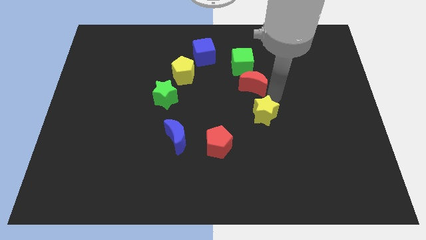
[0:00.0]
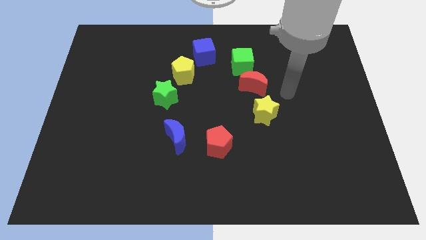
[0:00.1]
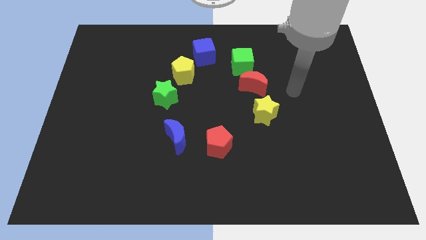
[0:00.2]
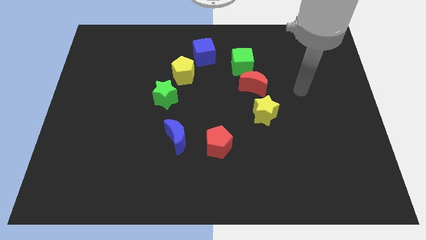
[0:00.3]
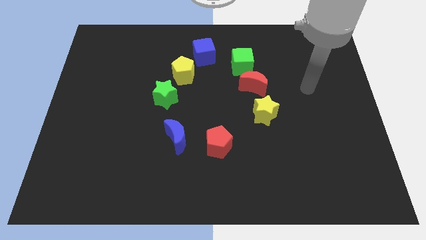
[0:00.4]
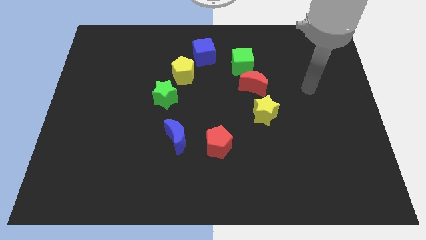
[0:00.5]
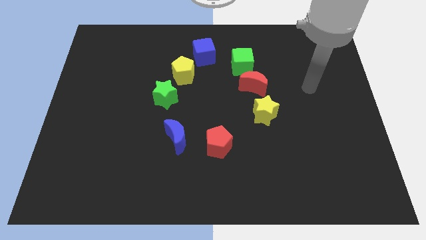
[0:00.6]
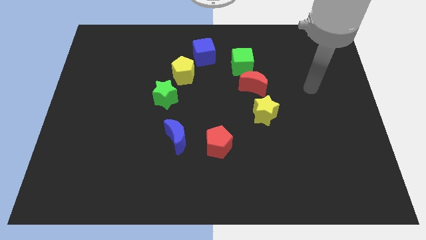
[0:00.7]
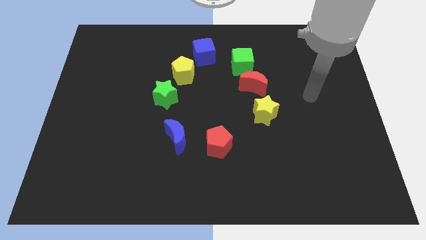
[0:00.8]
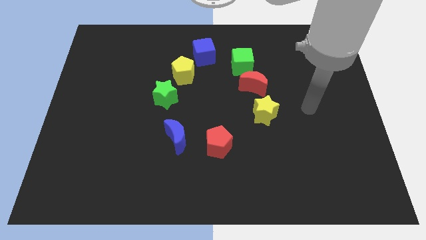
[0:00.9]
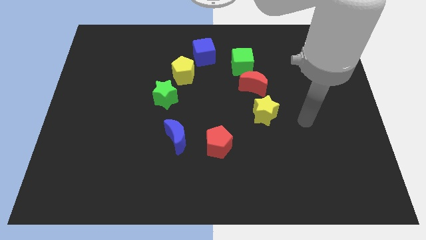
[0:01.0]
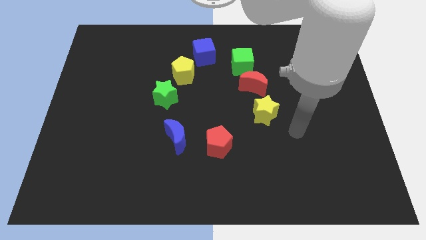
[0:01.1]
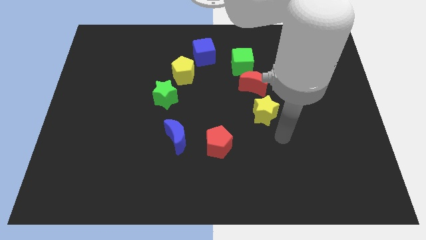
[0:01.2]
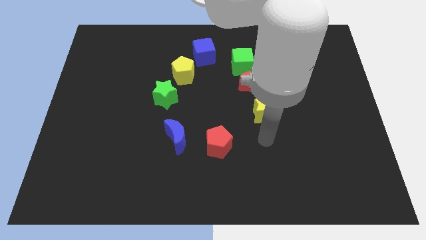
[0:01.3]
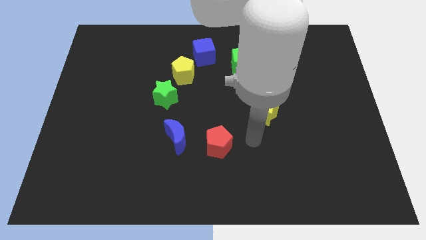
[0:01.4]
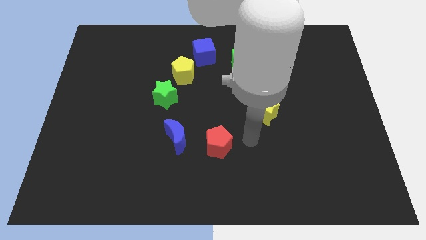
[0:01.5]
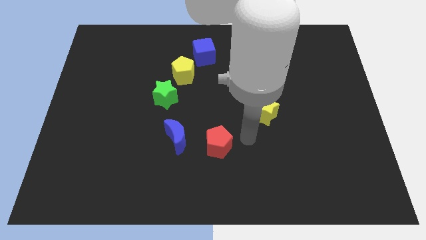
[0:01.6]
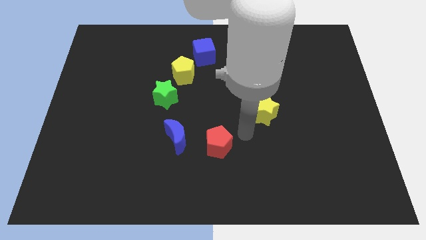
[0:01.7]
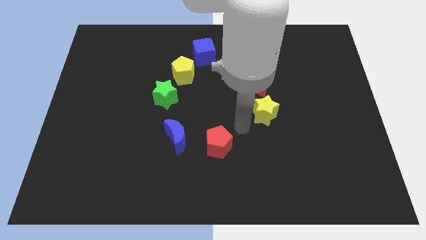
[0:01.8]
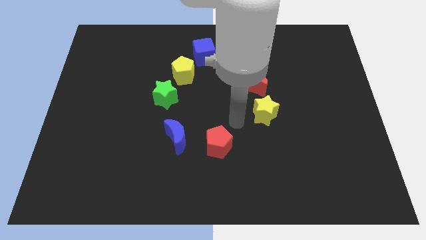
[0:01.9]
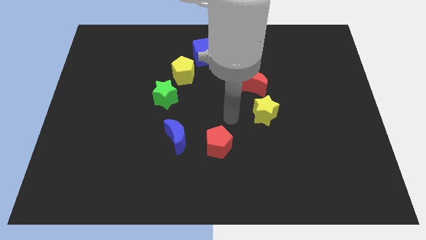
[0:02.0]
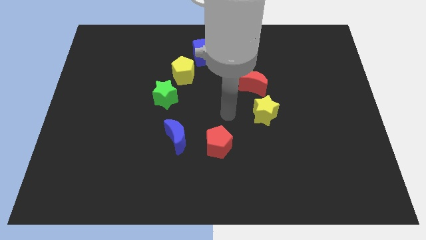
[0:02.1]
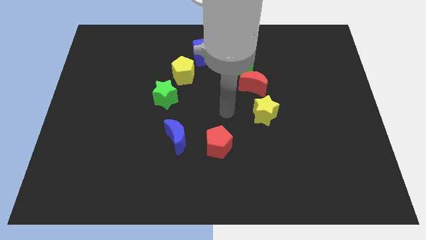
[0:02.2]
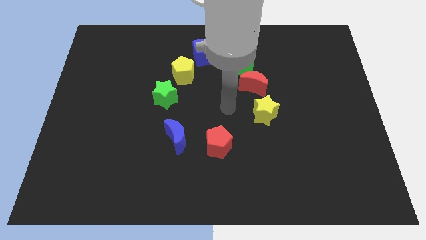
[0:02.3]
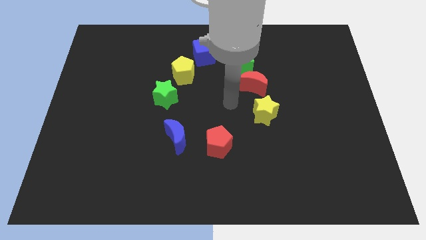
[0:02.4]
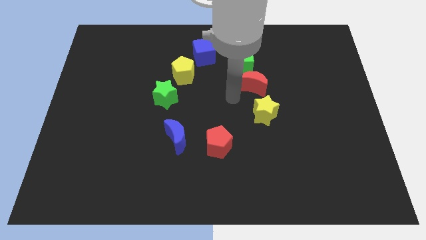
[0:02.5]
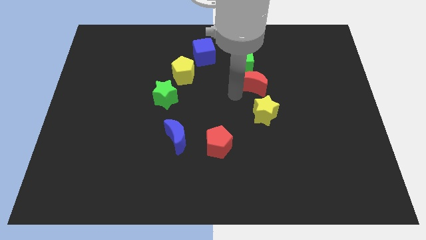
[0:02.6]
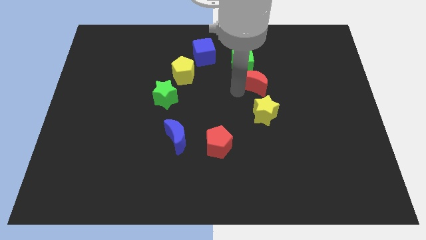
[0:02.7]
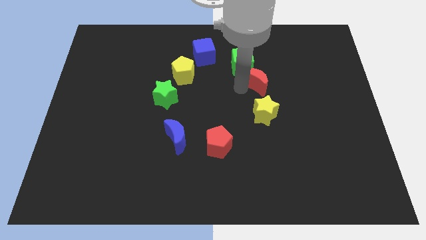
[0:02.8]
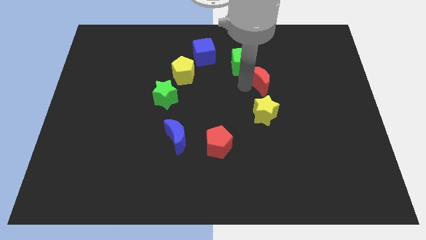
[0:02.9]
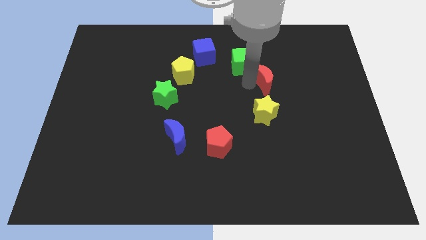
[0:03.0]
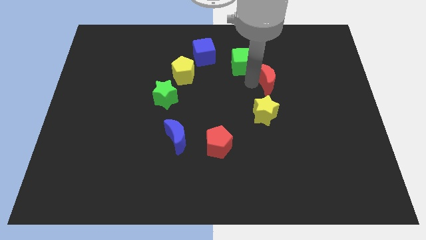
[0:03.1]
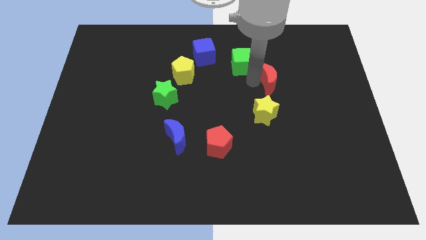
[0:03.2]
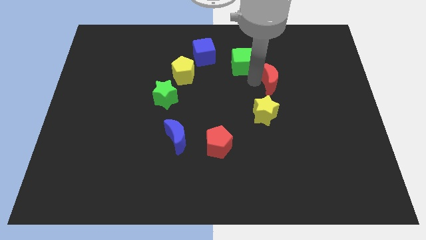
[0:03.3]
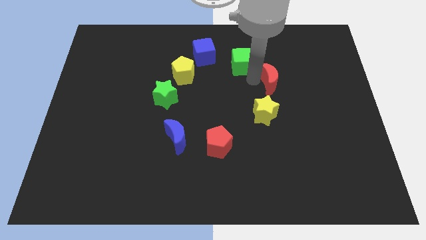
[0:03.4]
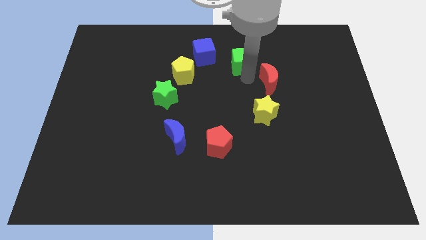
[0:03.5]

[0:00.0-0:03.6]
push the red moon slightly right

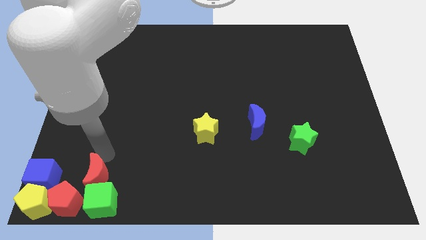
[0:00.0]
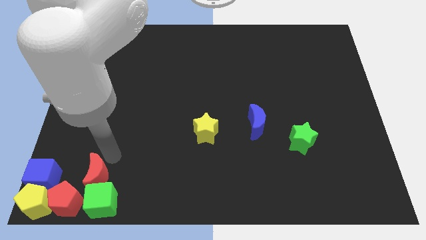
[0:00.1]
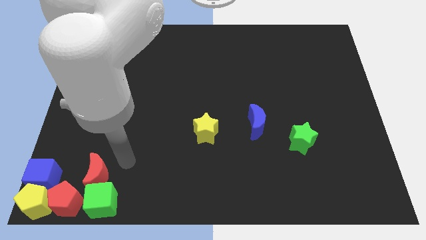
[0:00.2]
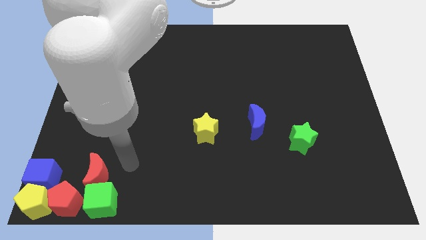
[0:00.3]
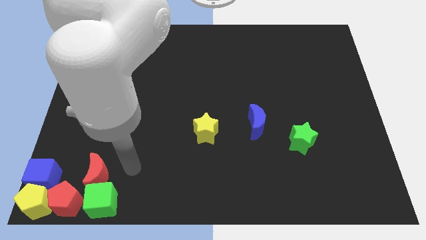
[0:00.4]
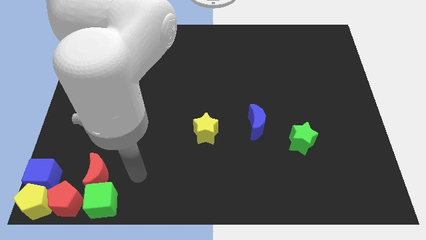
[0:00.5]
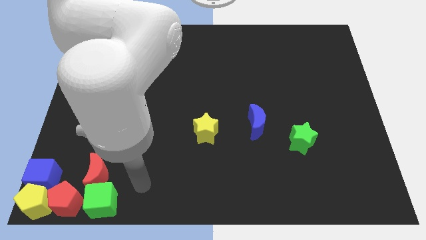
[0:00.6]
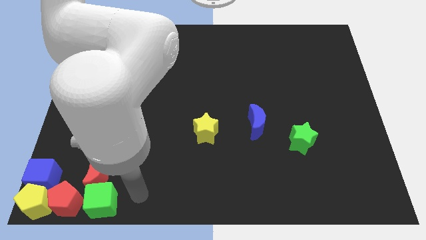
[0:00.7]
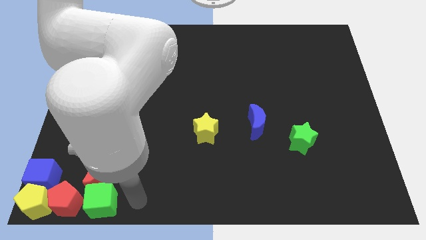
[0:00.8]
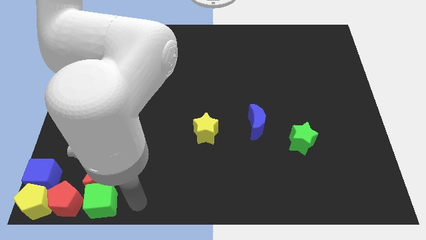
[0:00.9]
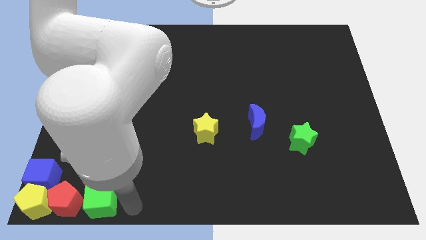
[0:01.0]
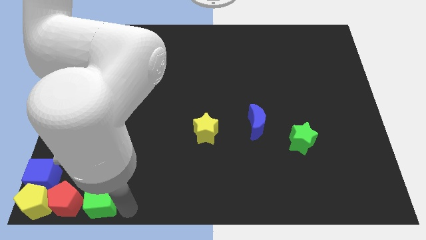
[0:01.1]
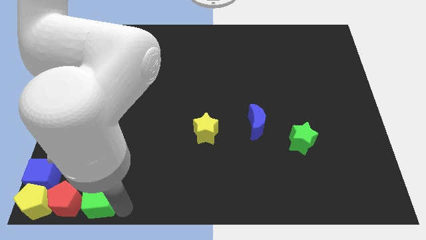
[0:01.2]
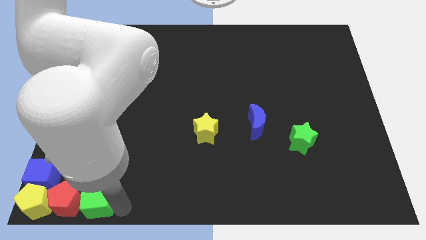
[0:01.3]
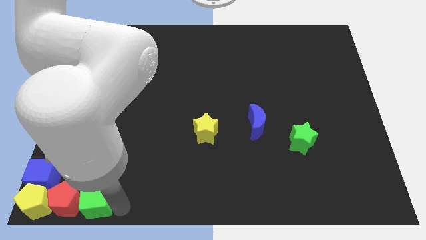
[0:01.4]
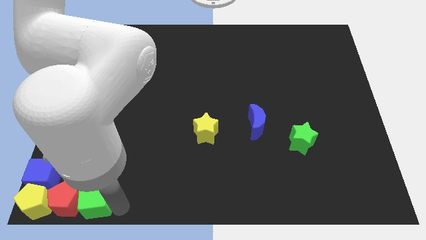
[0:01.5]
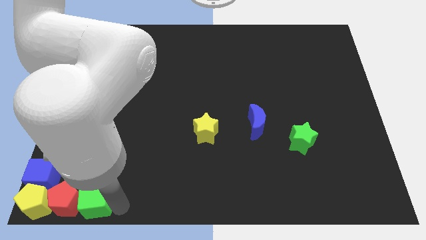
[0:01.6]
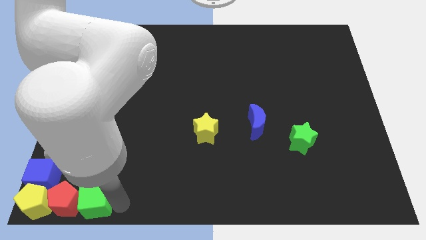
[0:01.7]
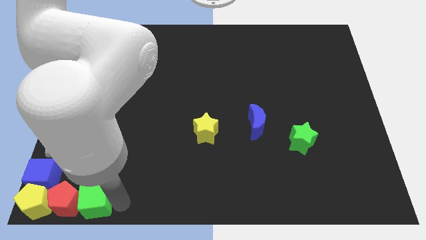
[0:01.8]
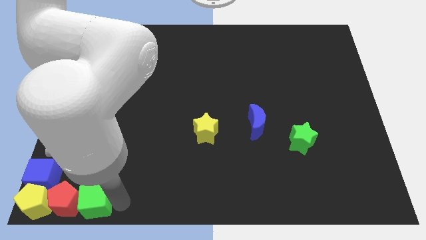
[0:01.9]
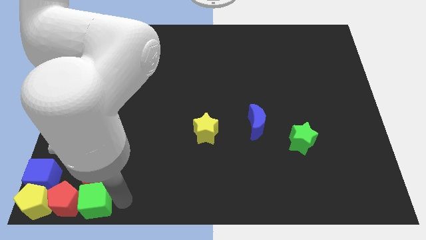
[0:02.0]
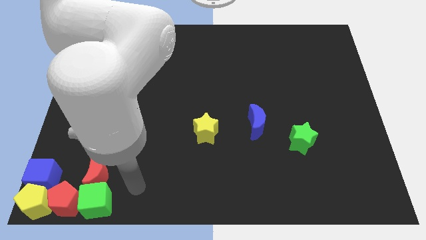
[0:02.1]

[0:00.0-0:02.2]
move the arm towards the center bottom

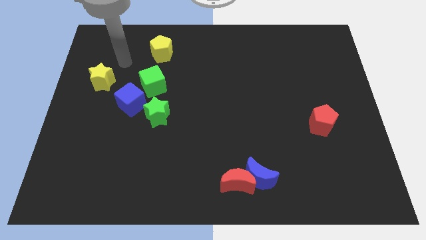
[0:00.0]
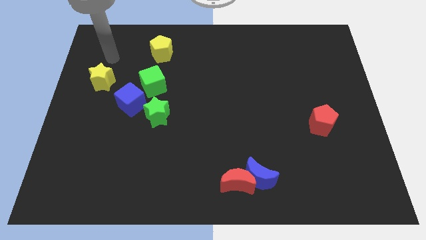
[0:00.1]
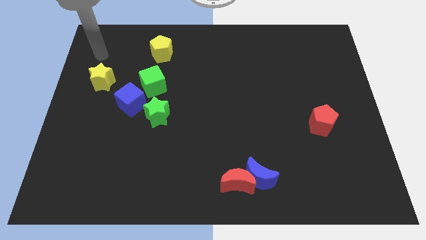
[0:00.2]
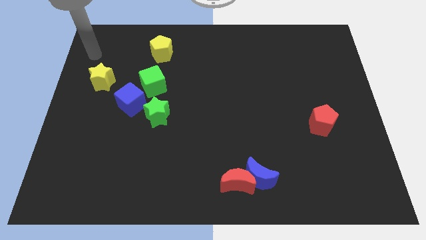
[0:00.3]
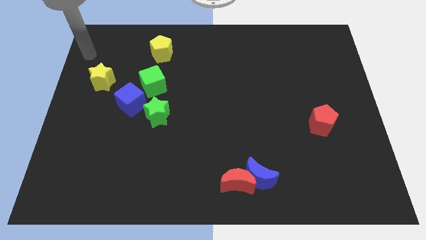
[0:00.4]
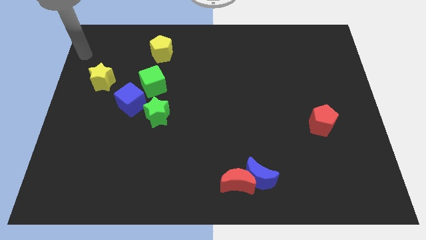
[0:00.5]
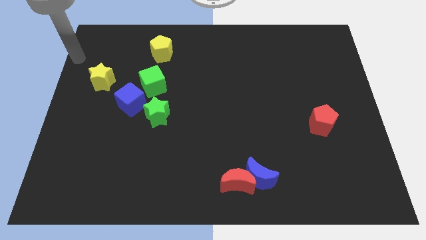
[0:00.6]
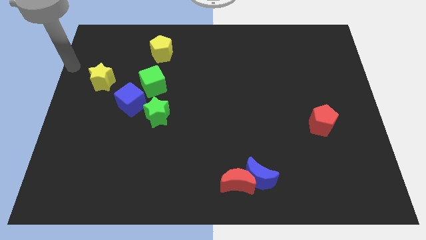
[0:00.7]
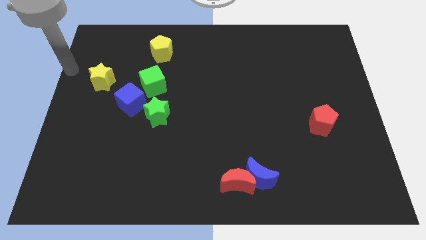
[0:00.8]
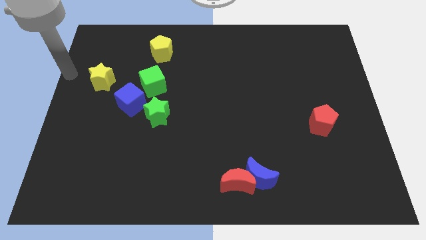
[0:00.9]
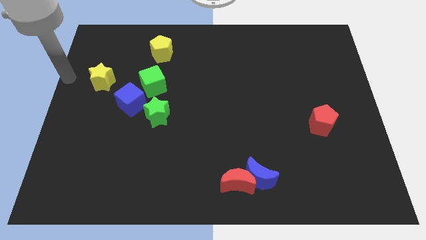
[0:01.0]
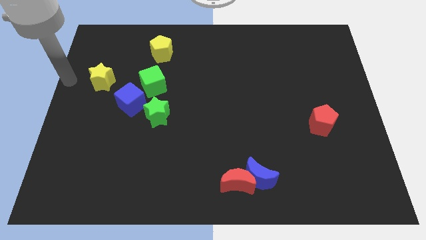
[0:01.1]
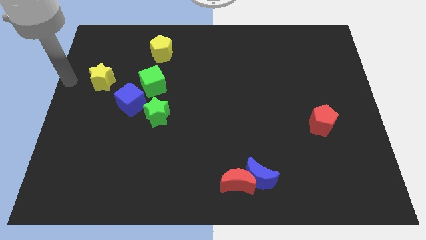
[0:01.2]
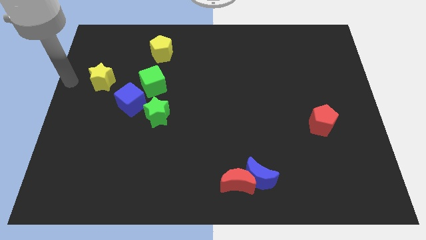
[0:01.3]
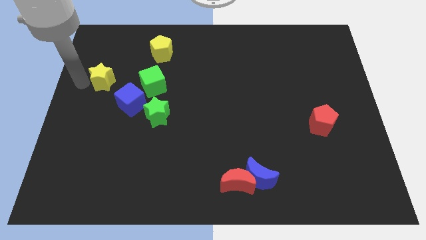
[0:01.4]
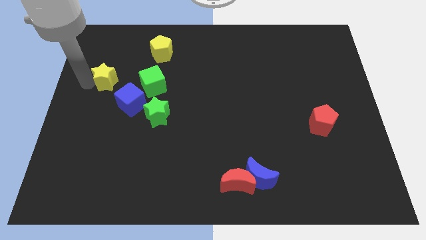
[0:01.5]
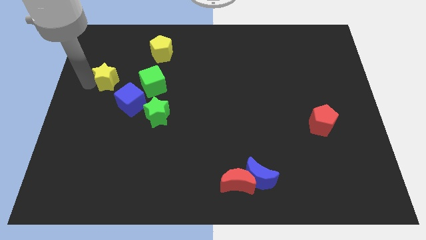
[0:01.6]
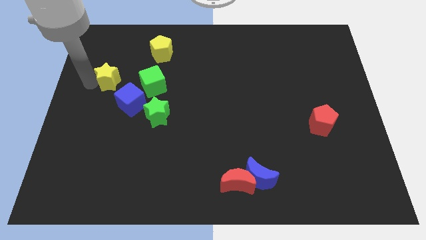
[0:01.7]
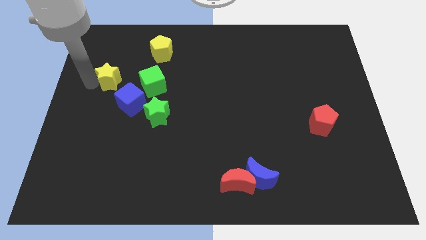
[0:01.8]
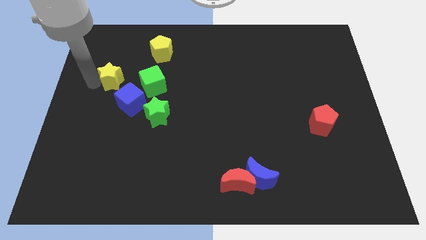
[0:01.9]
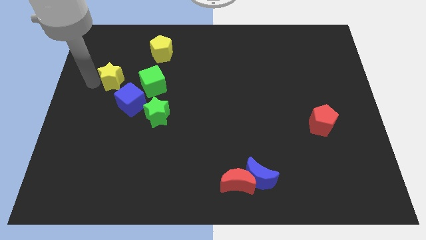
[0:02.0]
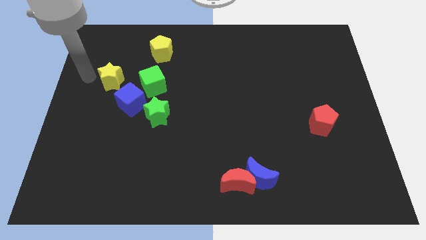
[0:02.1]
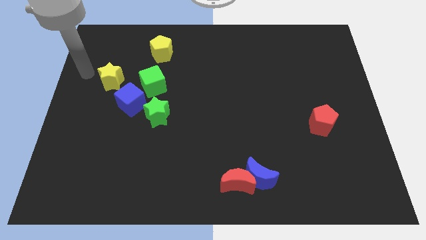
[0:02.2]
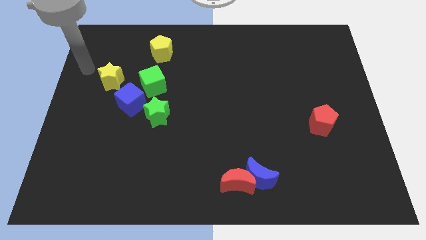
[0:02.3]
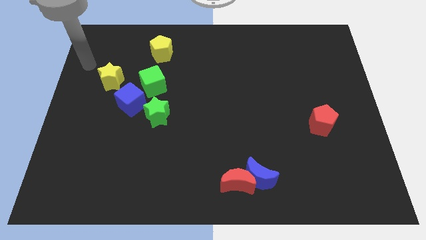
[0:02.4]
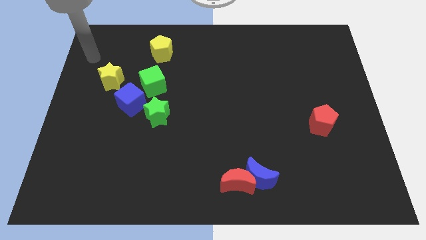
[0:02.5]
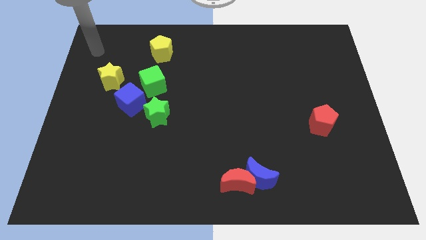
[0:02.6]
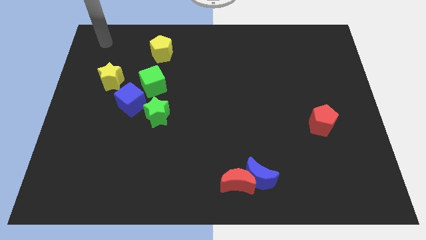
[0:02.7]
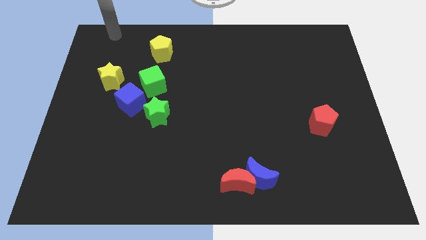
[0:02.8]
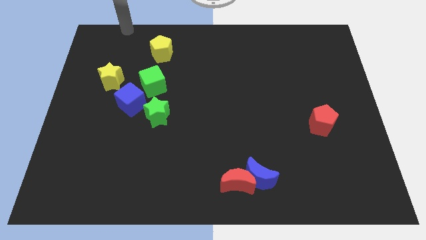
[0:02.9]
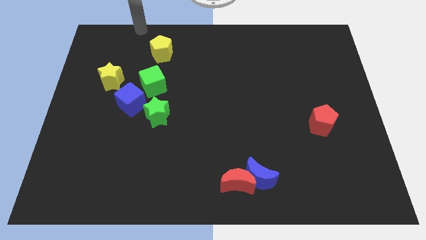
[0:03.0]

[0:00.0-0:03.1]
push yellow star to its right
